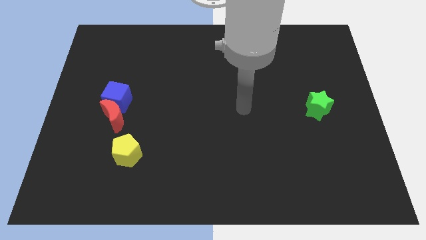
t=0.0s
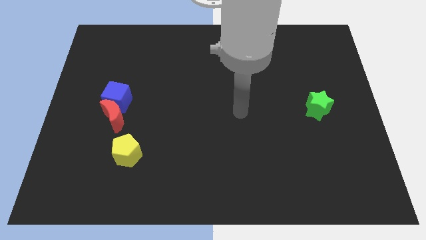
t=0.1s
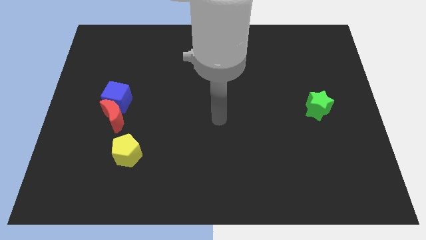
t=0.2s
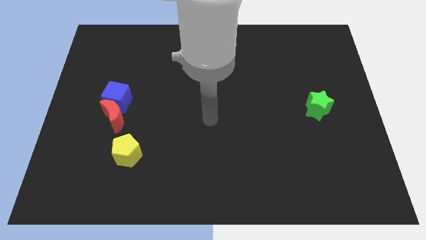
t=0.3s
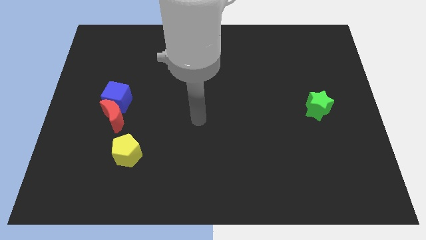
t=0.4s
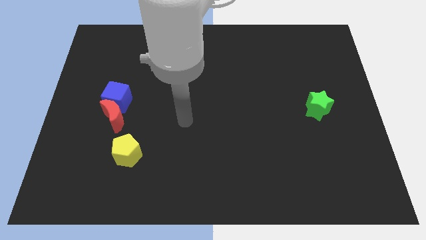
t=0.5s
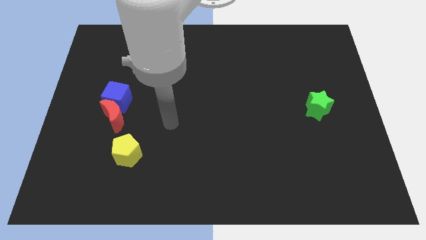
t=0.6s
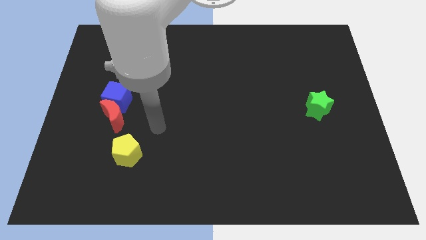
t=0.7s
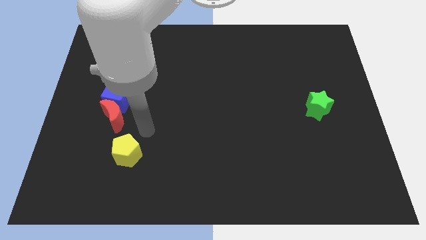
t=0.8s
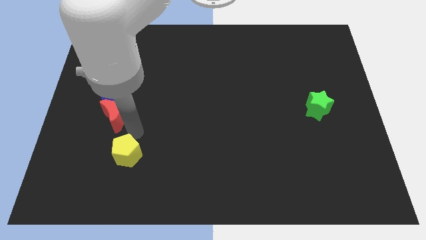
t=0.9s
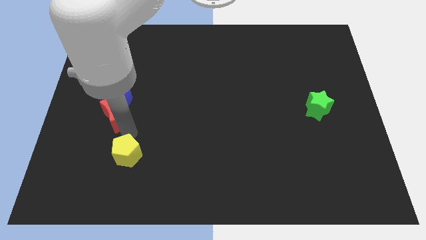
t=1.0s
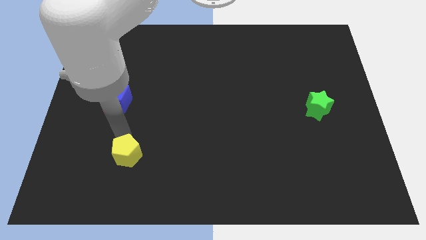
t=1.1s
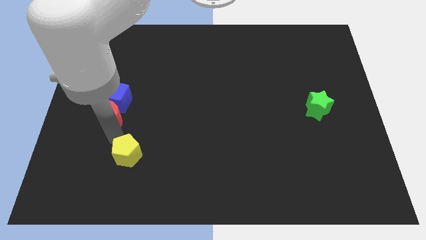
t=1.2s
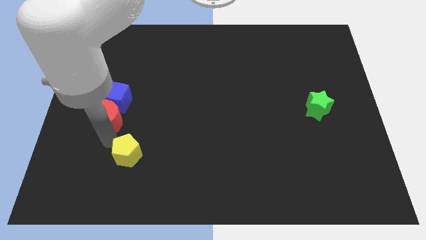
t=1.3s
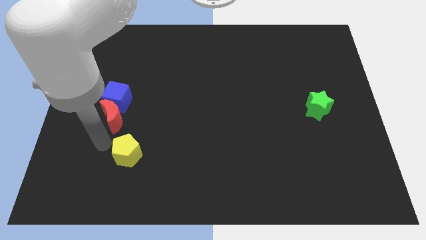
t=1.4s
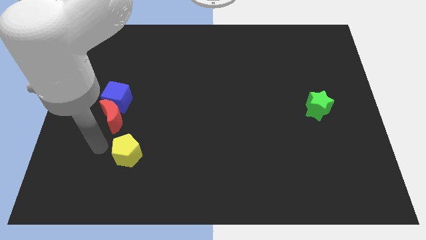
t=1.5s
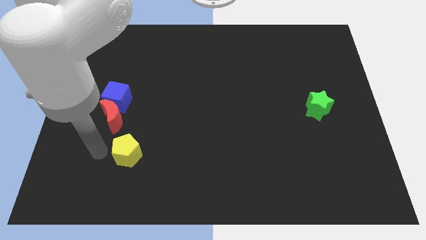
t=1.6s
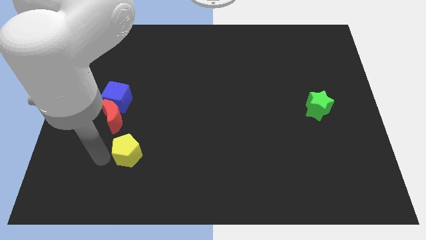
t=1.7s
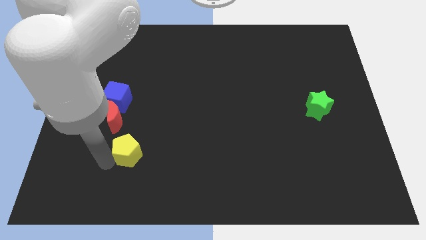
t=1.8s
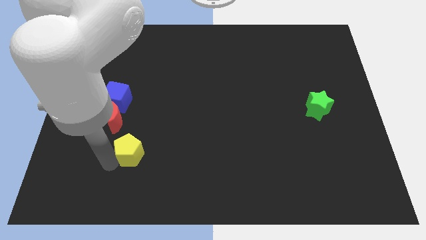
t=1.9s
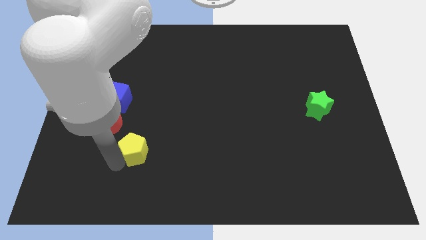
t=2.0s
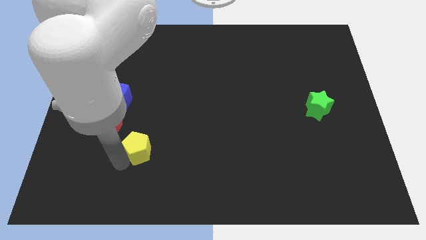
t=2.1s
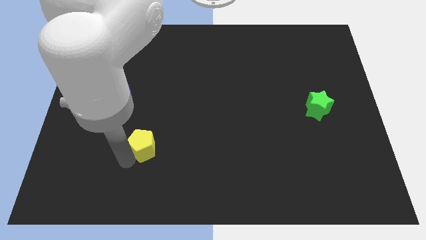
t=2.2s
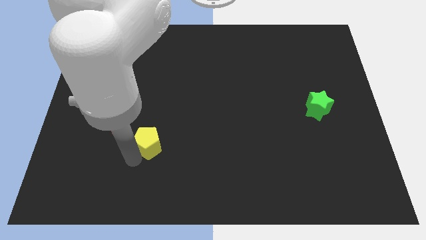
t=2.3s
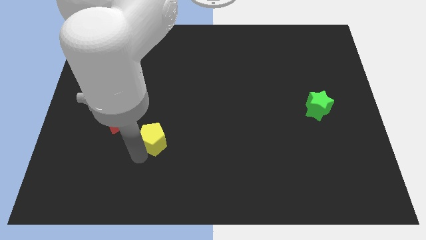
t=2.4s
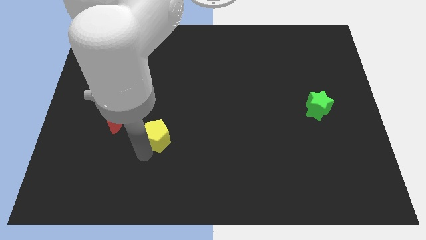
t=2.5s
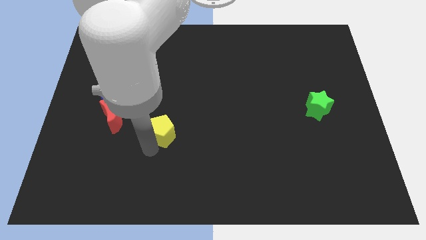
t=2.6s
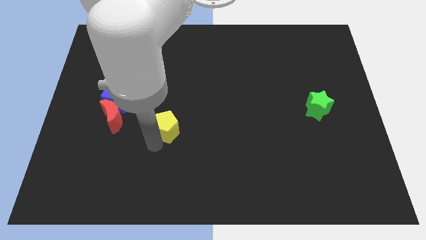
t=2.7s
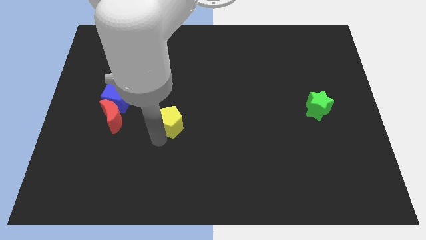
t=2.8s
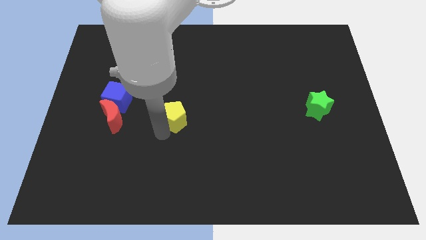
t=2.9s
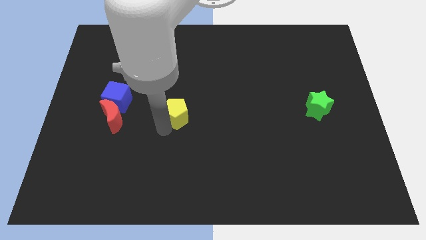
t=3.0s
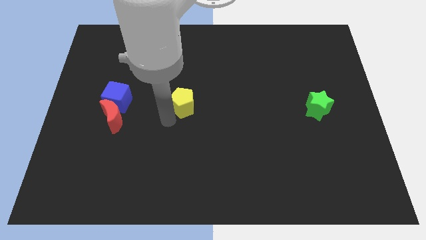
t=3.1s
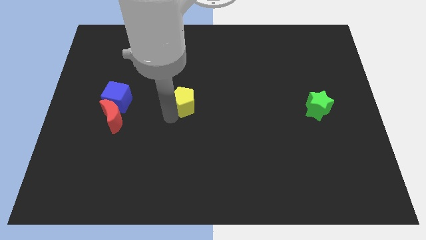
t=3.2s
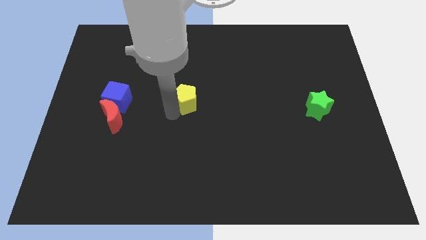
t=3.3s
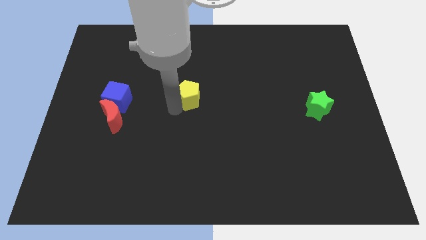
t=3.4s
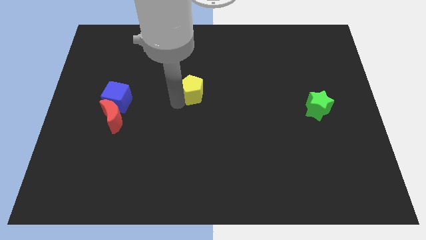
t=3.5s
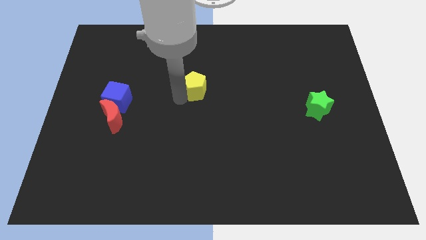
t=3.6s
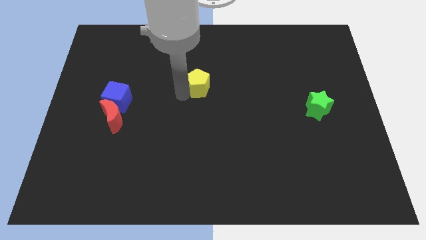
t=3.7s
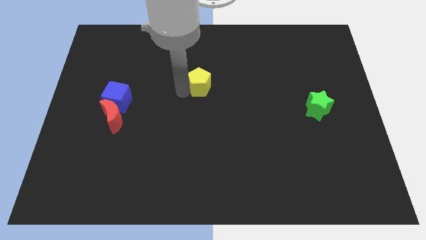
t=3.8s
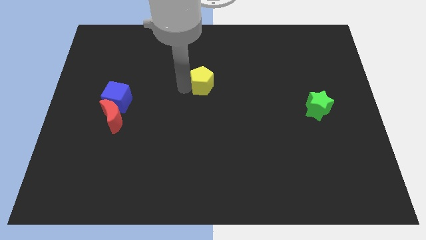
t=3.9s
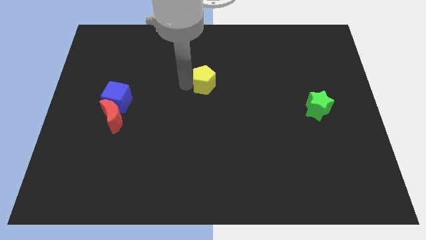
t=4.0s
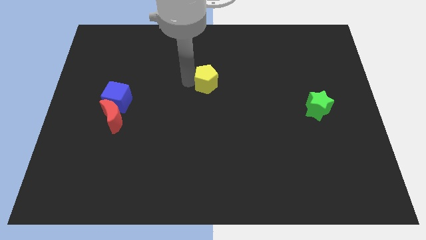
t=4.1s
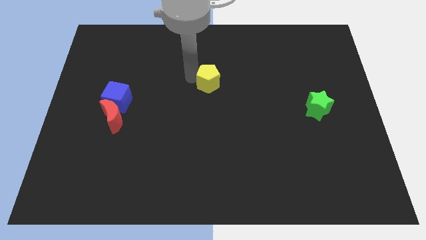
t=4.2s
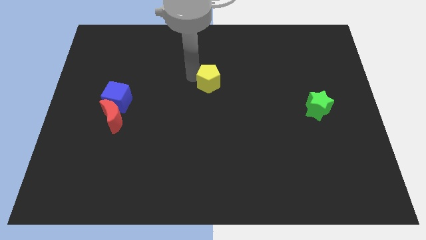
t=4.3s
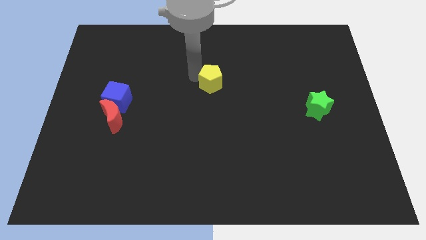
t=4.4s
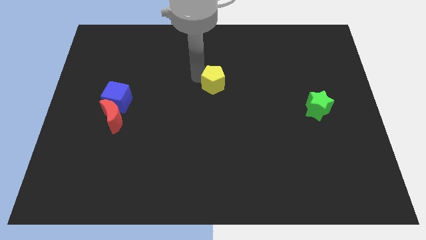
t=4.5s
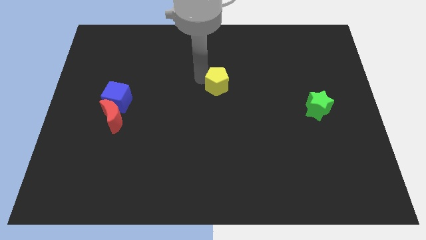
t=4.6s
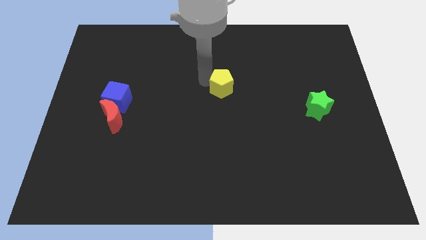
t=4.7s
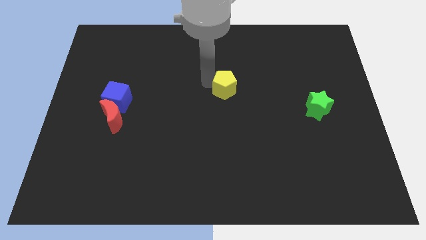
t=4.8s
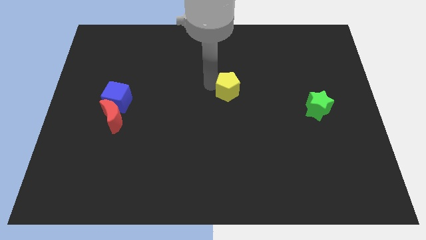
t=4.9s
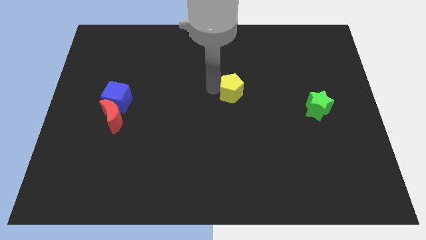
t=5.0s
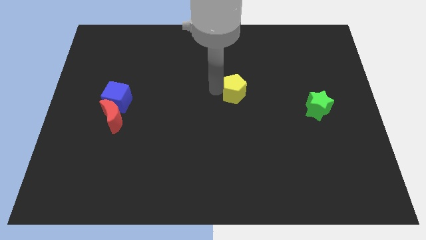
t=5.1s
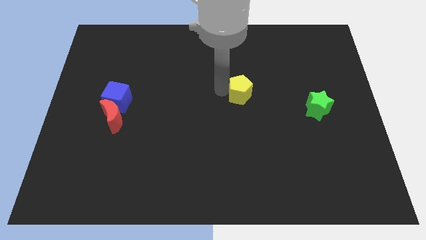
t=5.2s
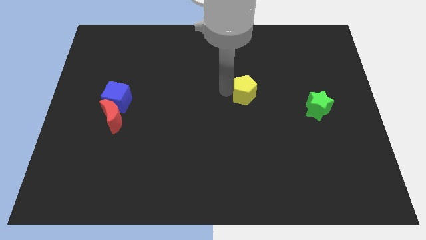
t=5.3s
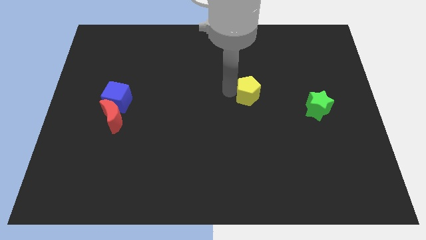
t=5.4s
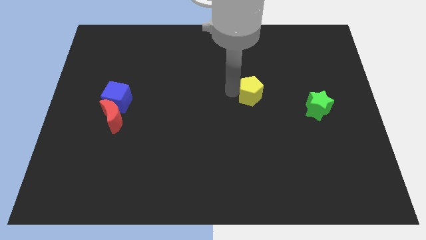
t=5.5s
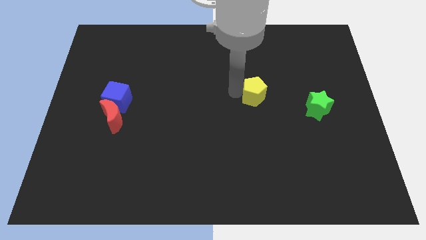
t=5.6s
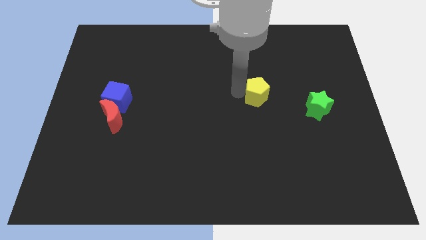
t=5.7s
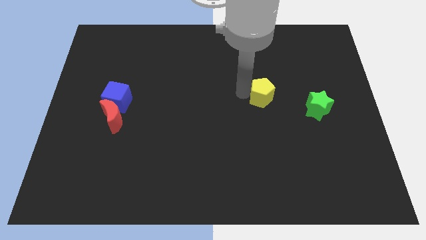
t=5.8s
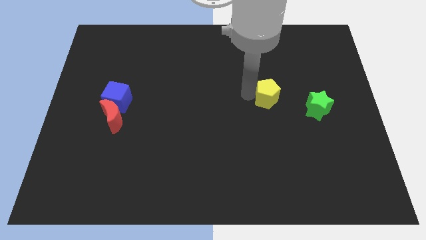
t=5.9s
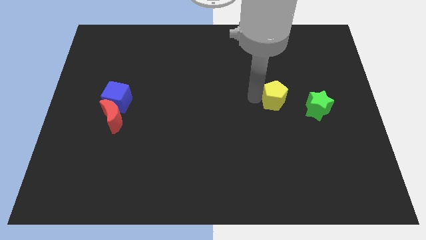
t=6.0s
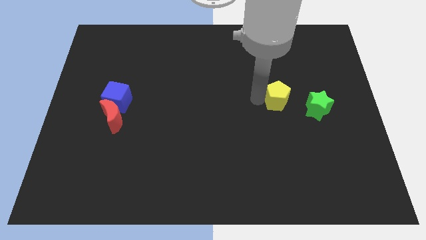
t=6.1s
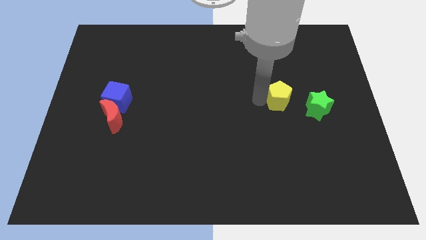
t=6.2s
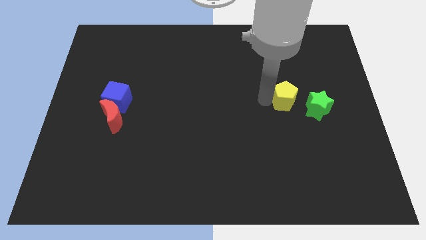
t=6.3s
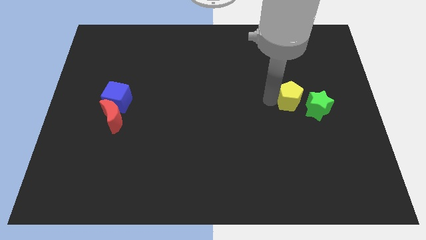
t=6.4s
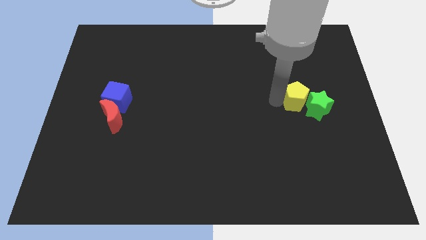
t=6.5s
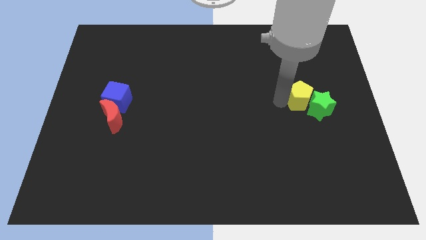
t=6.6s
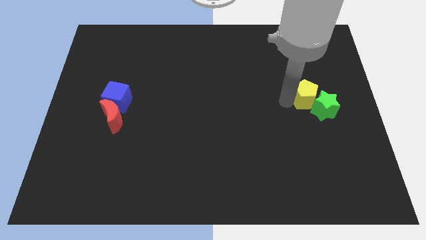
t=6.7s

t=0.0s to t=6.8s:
push the pentagon towards the star

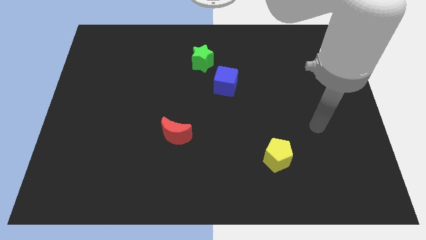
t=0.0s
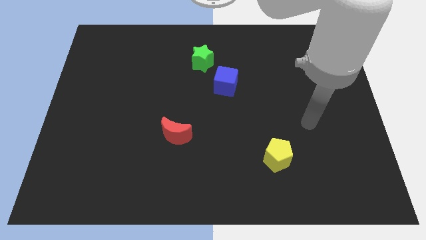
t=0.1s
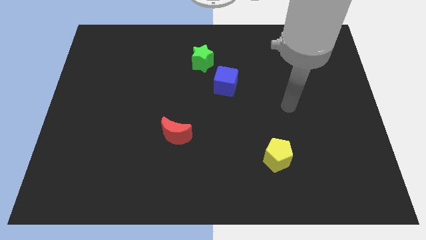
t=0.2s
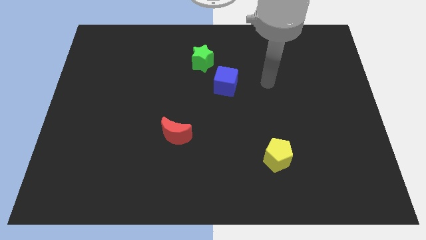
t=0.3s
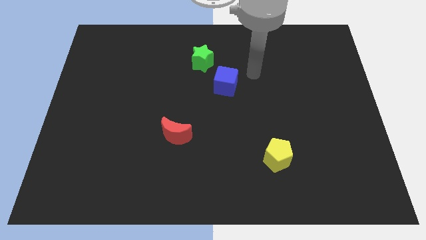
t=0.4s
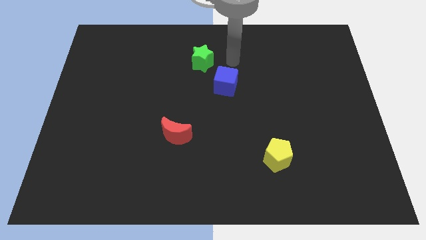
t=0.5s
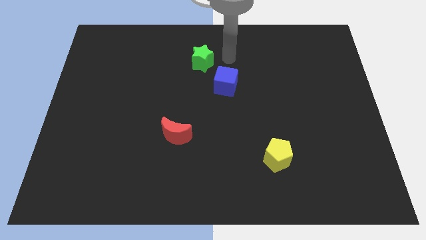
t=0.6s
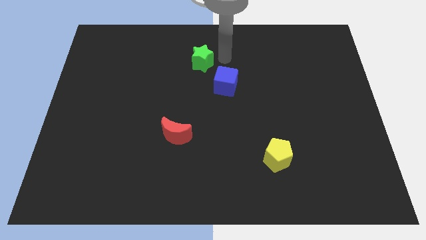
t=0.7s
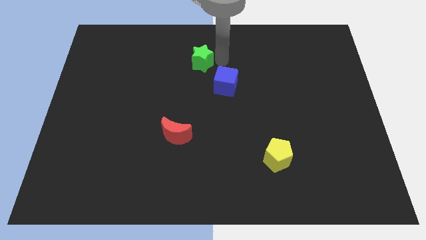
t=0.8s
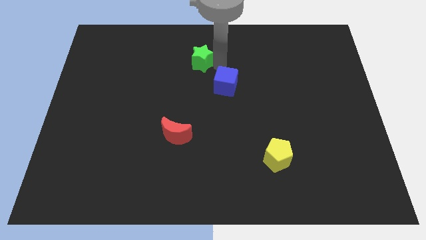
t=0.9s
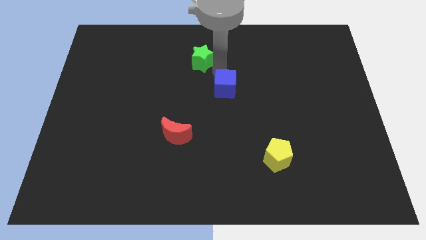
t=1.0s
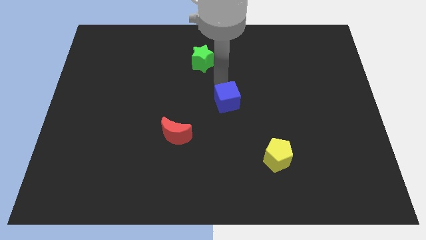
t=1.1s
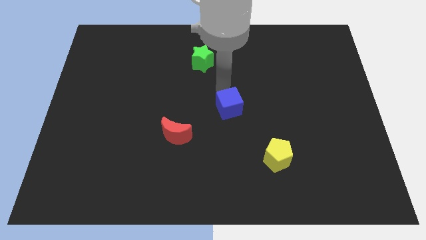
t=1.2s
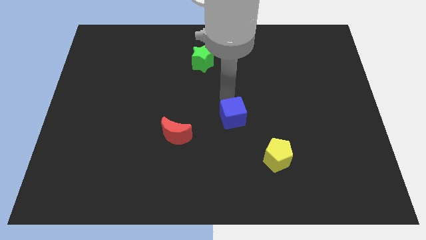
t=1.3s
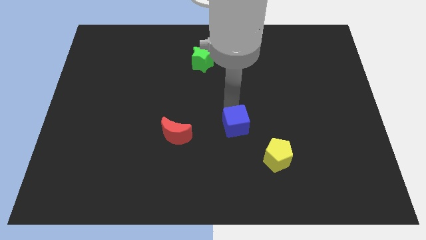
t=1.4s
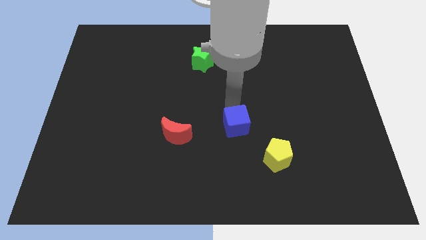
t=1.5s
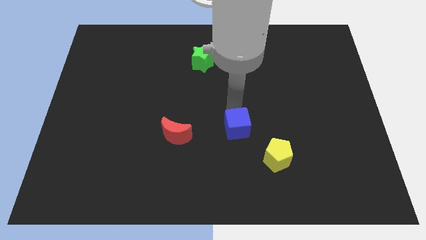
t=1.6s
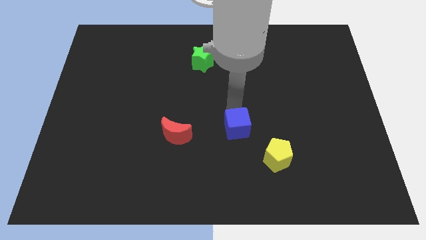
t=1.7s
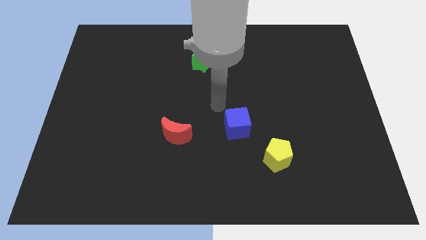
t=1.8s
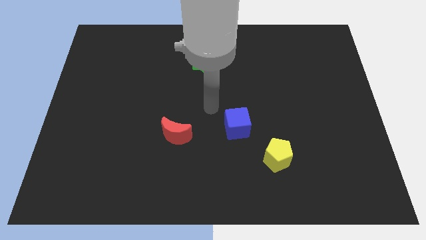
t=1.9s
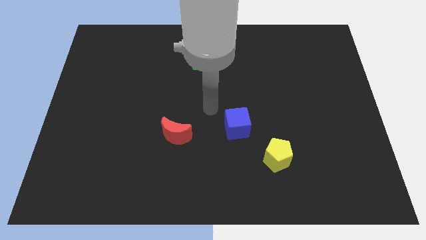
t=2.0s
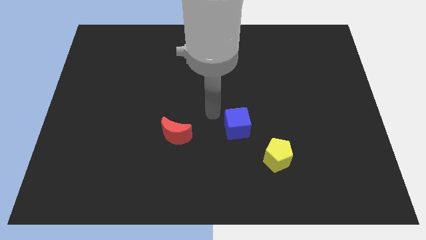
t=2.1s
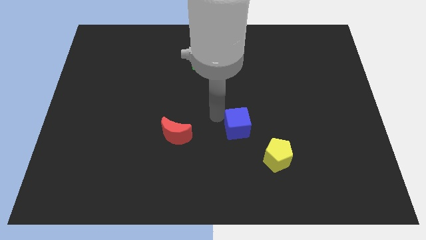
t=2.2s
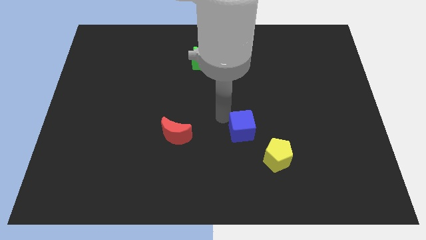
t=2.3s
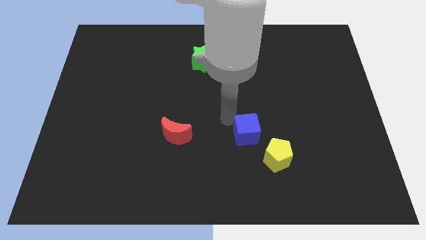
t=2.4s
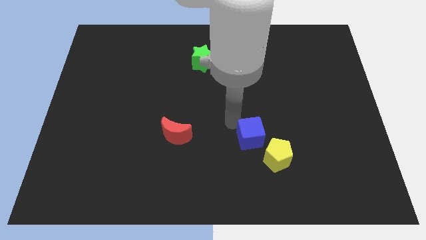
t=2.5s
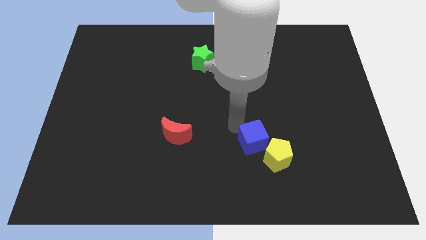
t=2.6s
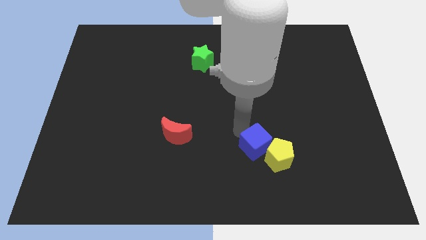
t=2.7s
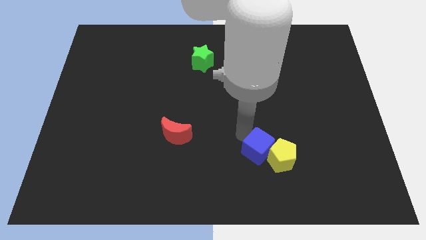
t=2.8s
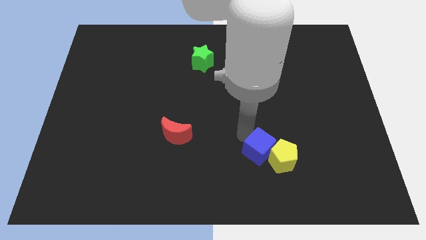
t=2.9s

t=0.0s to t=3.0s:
slide the blue cube close to the pentagon
